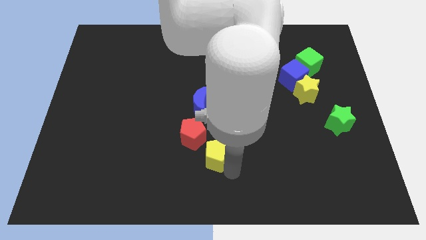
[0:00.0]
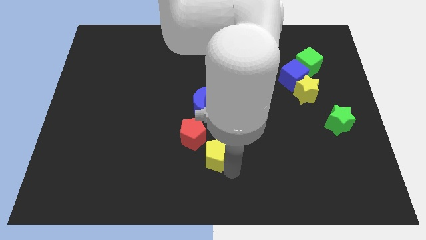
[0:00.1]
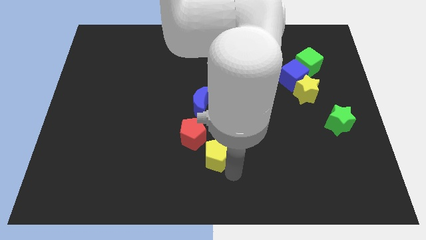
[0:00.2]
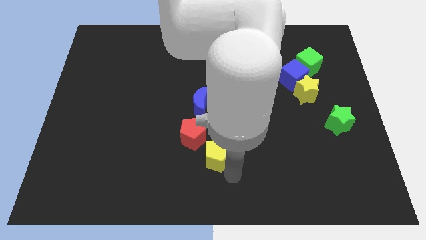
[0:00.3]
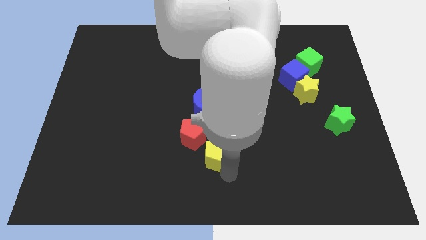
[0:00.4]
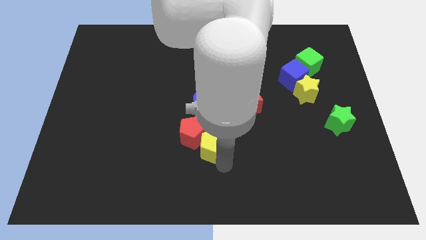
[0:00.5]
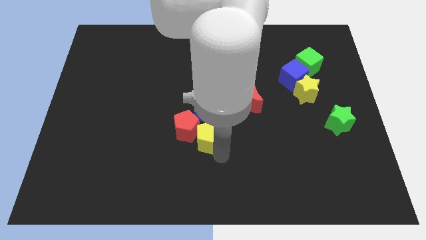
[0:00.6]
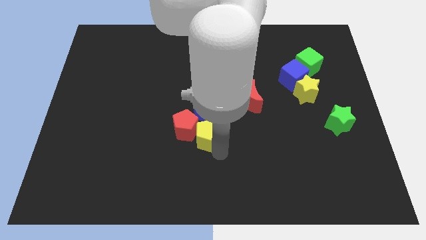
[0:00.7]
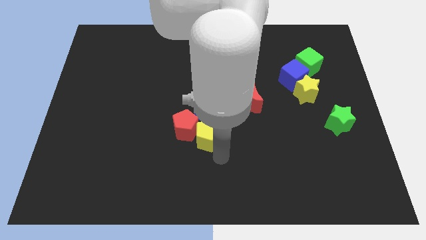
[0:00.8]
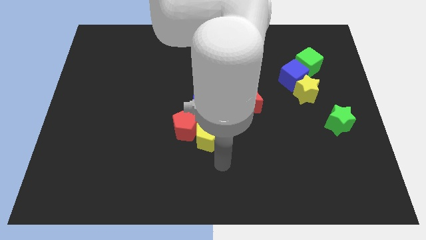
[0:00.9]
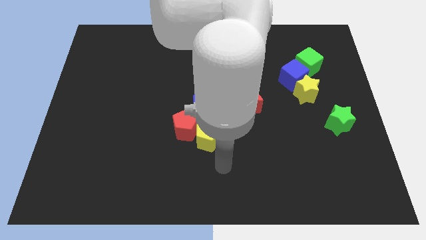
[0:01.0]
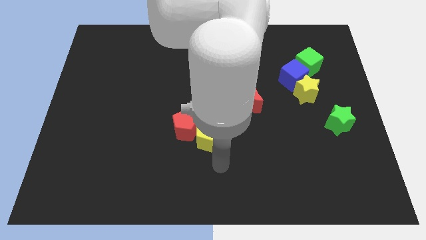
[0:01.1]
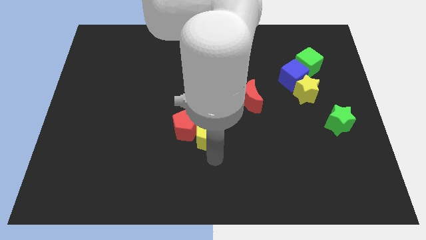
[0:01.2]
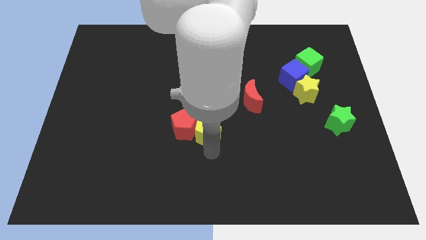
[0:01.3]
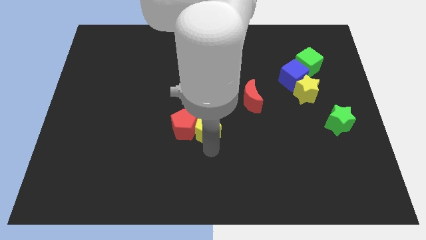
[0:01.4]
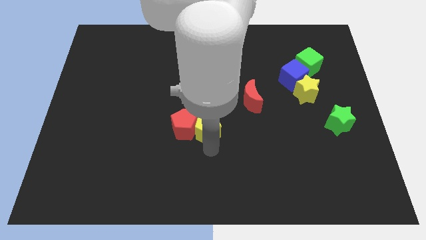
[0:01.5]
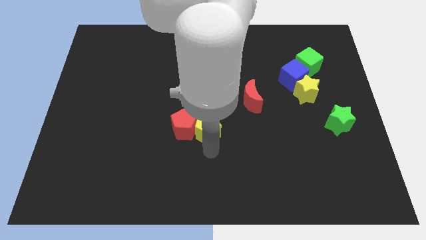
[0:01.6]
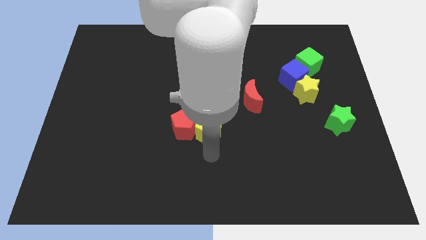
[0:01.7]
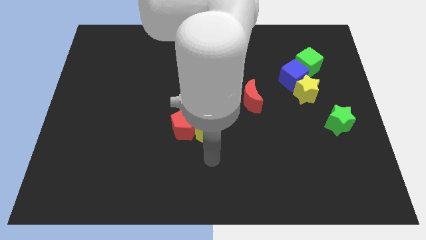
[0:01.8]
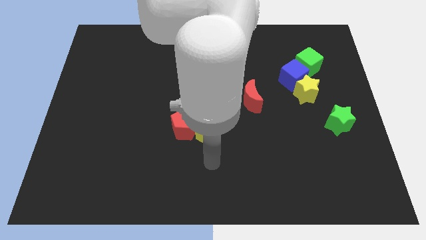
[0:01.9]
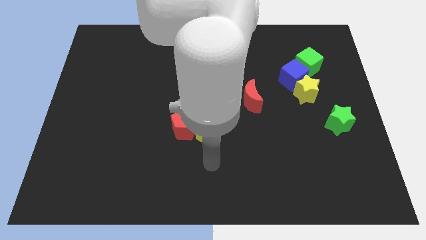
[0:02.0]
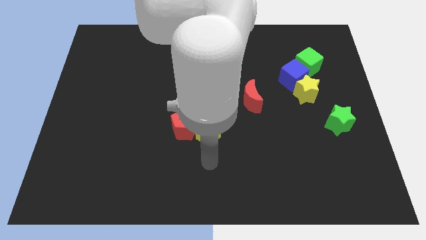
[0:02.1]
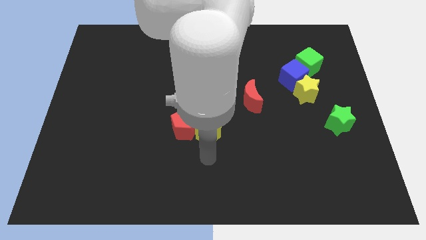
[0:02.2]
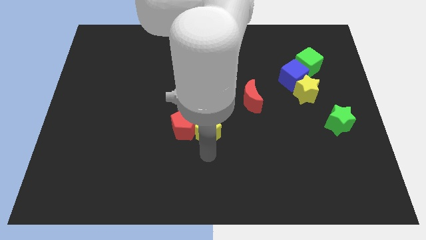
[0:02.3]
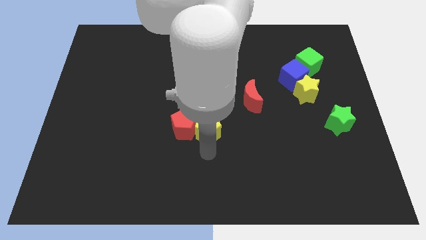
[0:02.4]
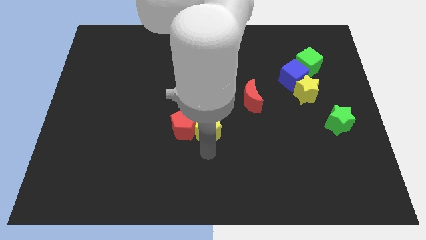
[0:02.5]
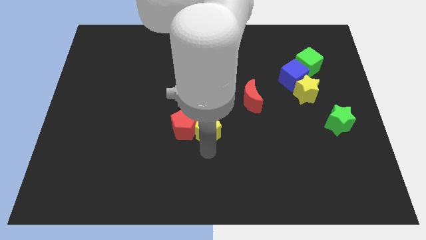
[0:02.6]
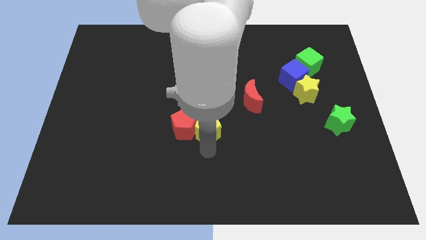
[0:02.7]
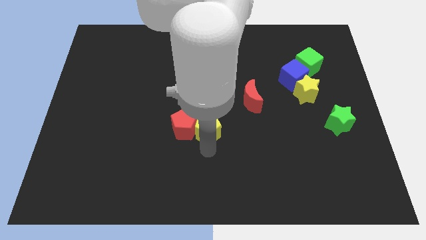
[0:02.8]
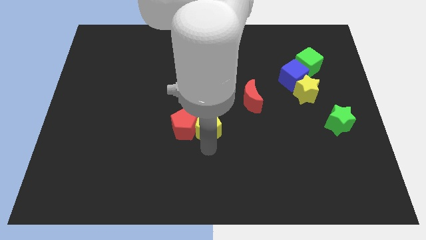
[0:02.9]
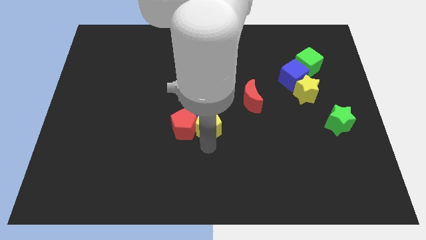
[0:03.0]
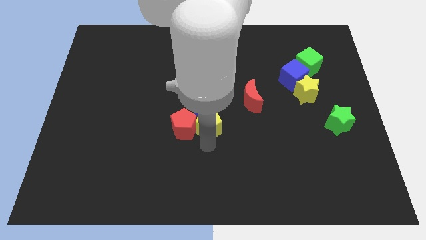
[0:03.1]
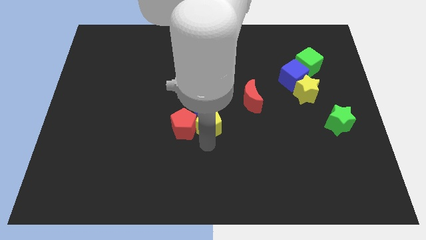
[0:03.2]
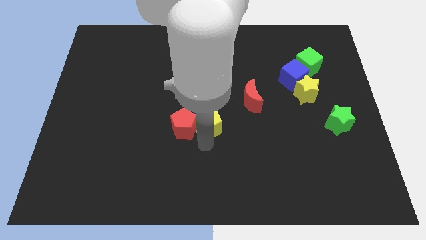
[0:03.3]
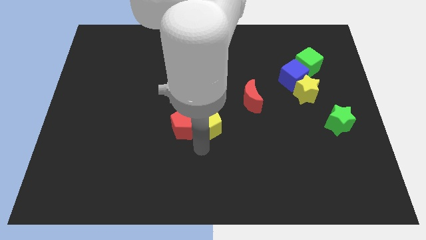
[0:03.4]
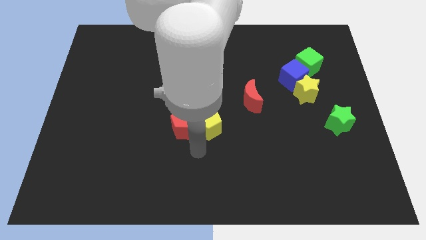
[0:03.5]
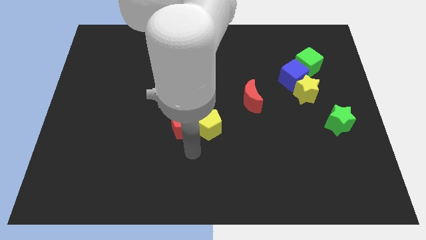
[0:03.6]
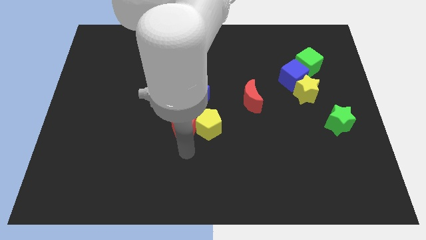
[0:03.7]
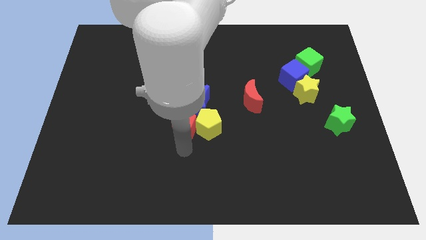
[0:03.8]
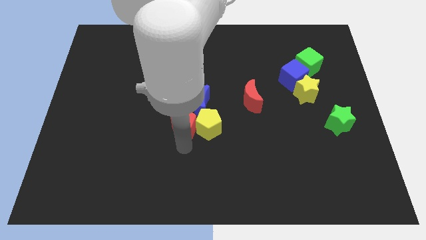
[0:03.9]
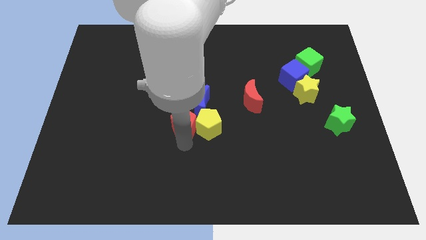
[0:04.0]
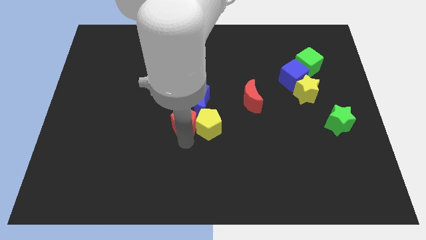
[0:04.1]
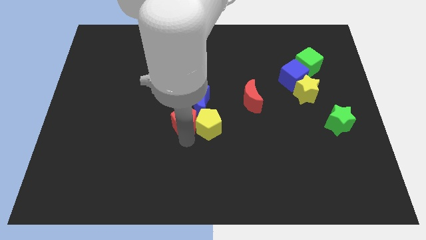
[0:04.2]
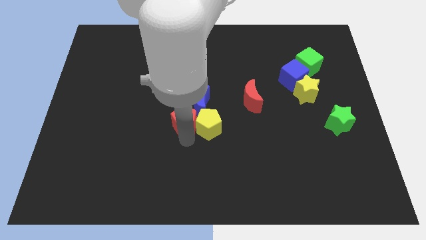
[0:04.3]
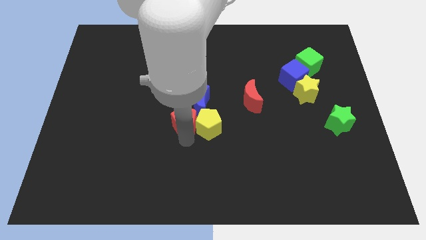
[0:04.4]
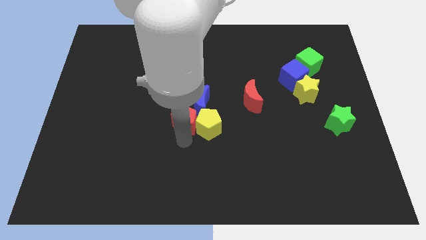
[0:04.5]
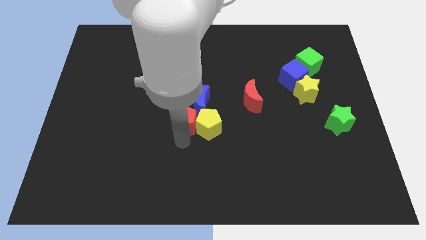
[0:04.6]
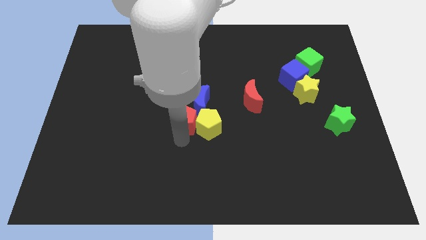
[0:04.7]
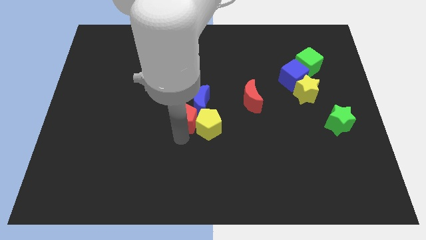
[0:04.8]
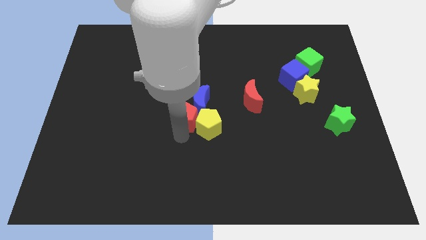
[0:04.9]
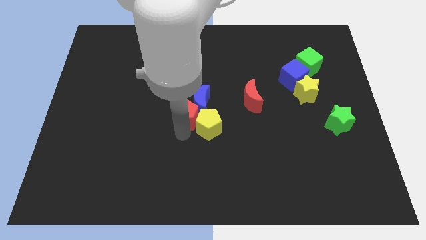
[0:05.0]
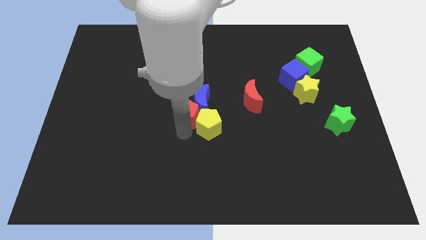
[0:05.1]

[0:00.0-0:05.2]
move the red pentagon and yellow pentagon towards the center below the blue crescent

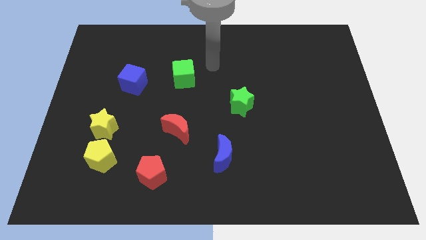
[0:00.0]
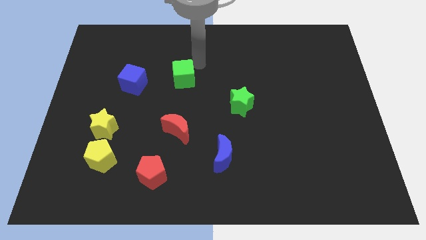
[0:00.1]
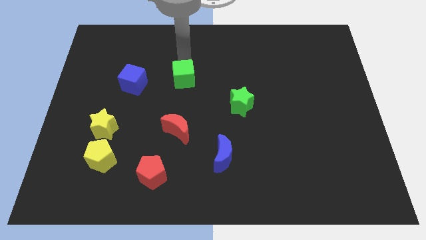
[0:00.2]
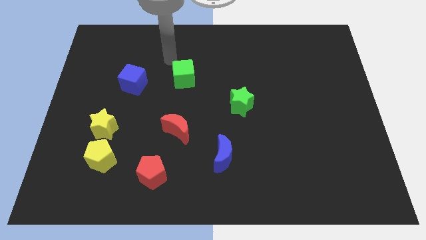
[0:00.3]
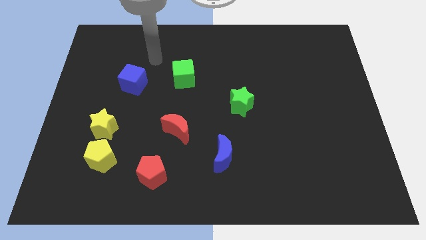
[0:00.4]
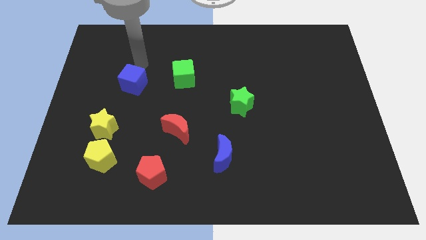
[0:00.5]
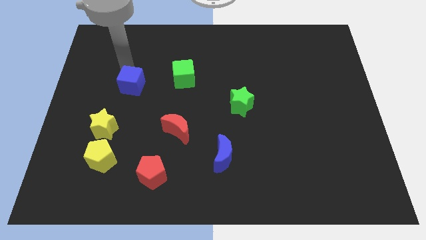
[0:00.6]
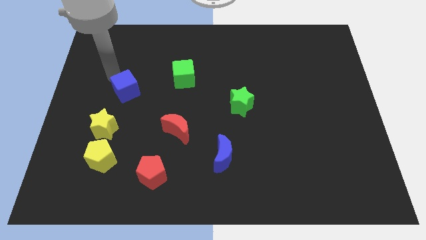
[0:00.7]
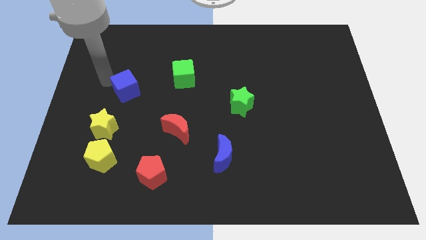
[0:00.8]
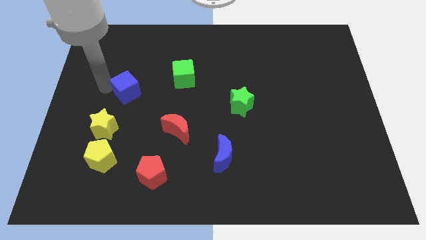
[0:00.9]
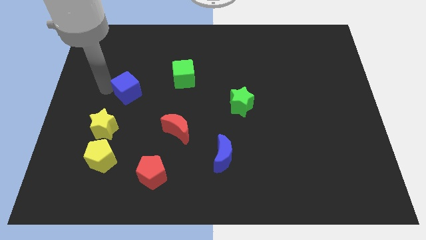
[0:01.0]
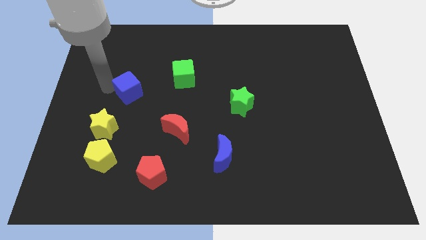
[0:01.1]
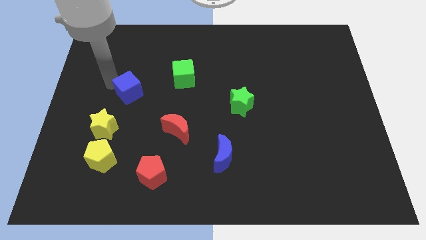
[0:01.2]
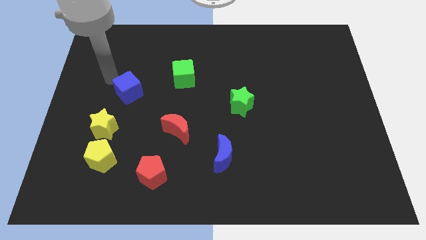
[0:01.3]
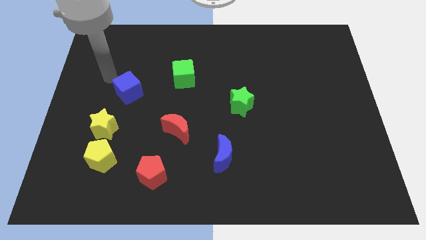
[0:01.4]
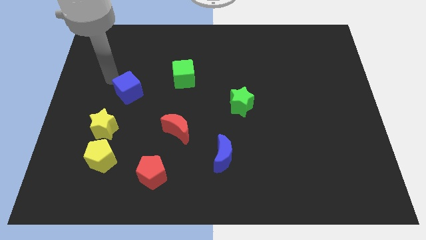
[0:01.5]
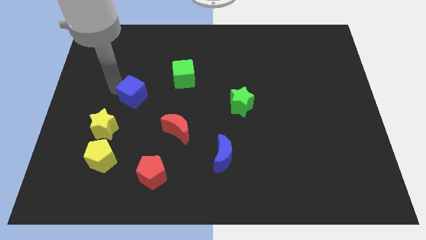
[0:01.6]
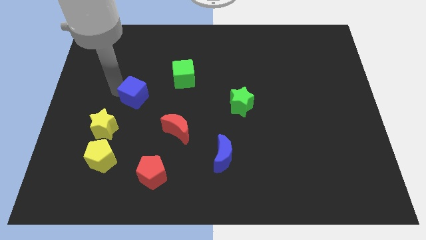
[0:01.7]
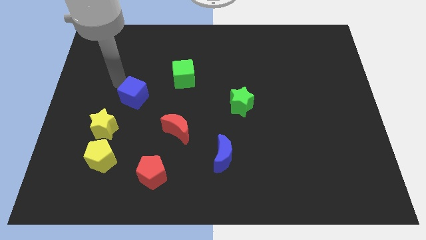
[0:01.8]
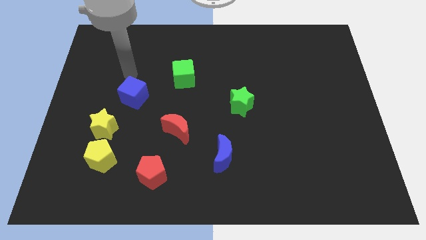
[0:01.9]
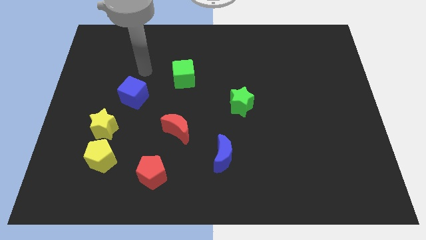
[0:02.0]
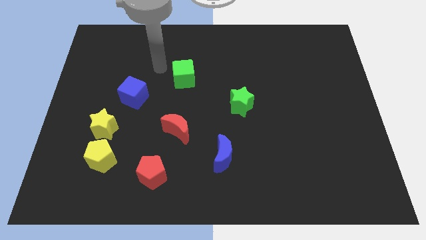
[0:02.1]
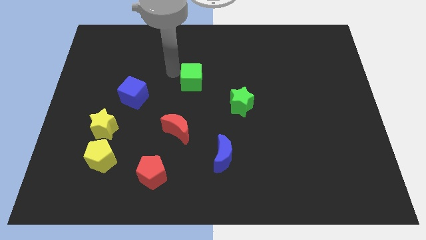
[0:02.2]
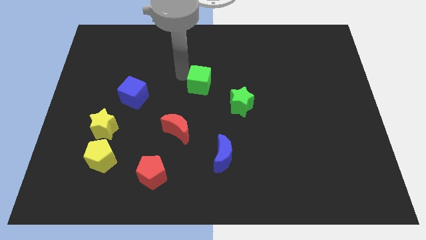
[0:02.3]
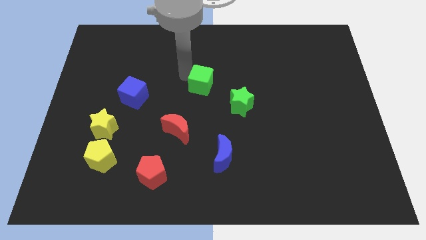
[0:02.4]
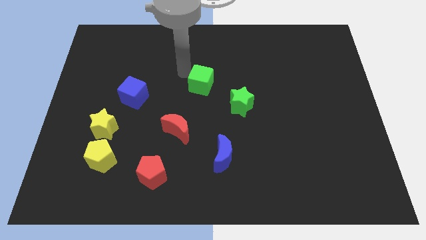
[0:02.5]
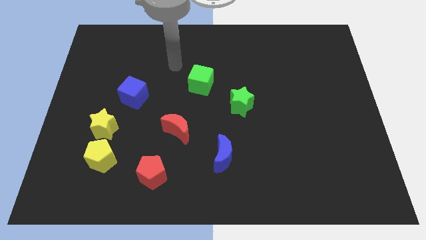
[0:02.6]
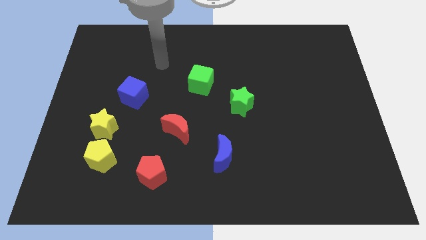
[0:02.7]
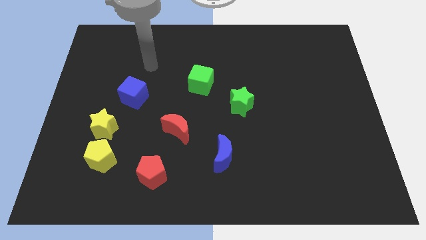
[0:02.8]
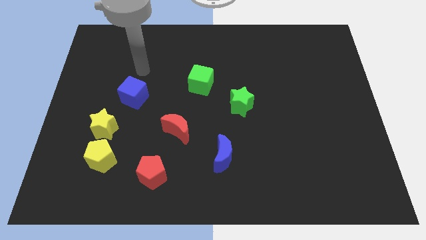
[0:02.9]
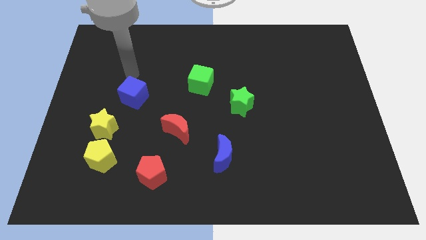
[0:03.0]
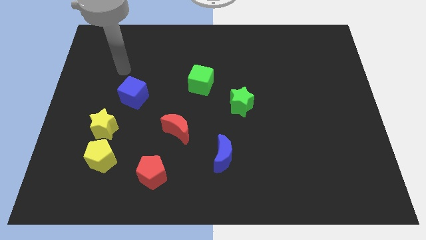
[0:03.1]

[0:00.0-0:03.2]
slightly move the cubes to the bottom of the board

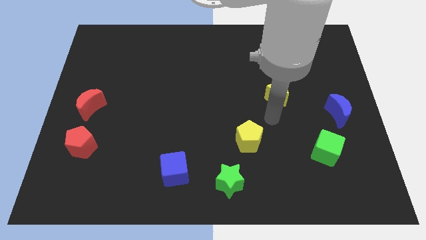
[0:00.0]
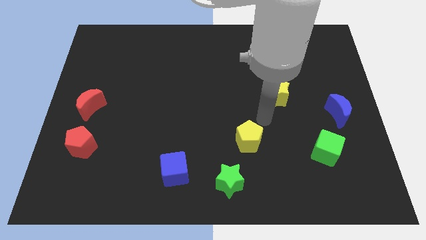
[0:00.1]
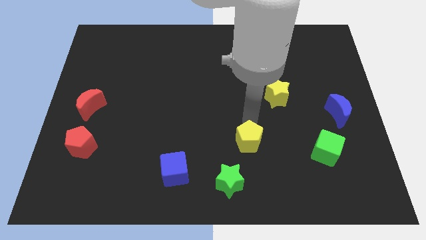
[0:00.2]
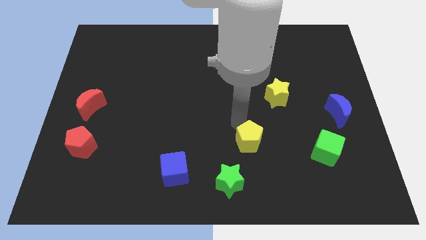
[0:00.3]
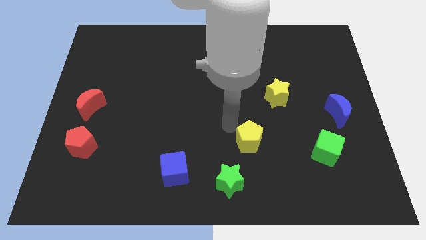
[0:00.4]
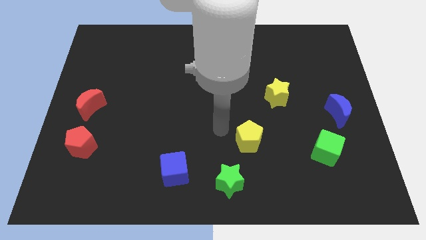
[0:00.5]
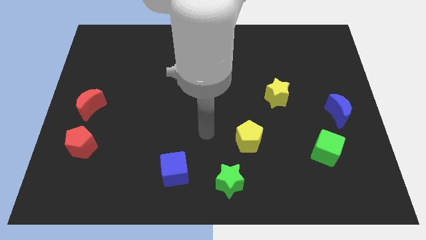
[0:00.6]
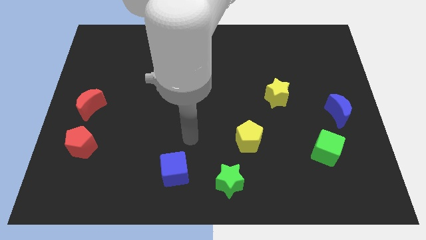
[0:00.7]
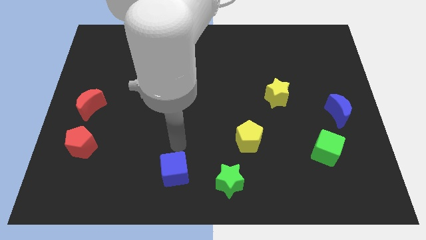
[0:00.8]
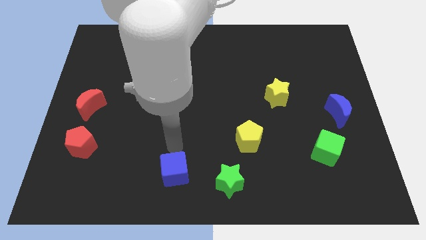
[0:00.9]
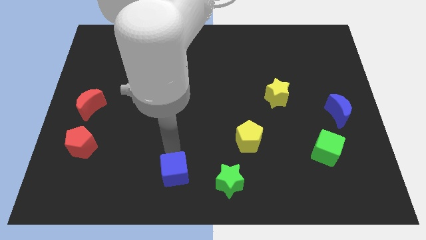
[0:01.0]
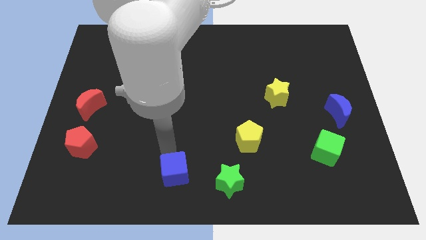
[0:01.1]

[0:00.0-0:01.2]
move your arm from yellow star to blue cube
